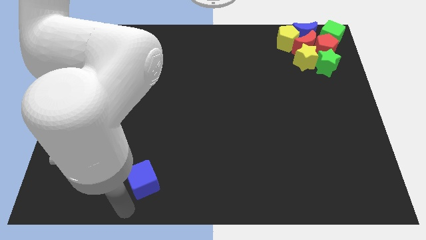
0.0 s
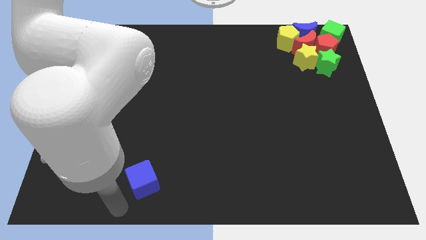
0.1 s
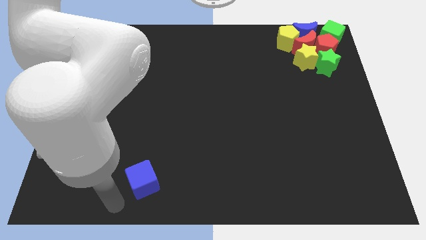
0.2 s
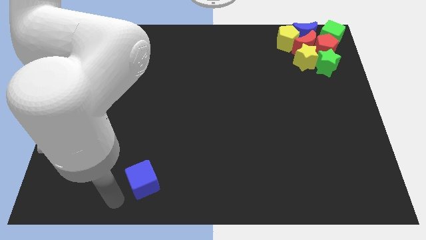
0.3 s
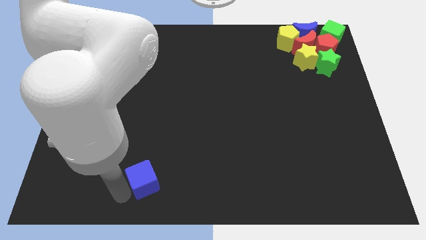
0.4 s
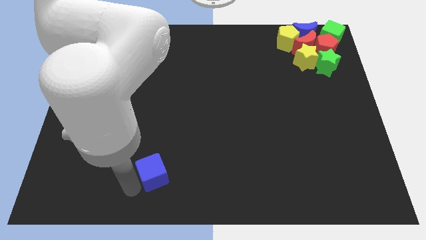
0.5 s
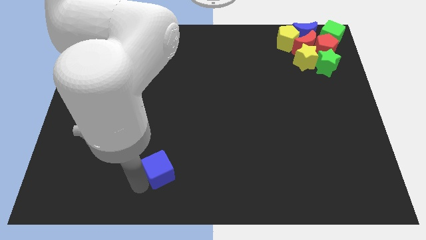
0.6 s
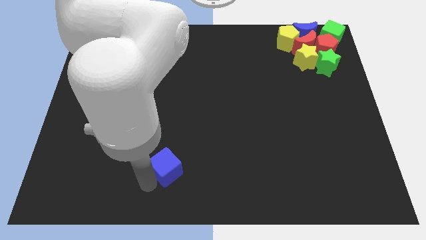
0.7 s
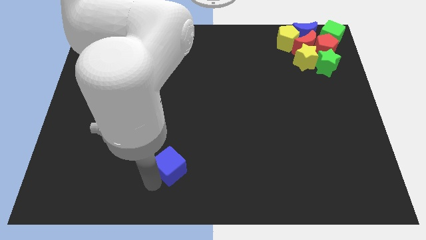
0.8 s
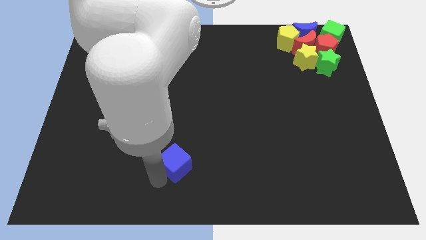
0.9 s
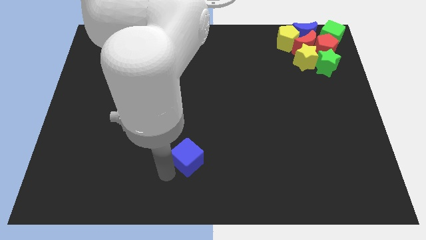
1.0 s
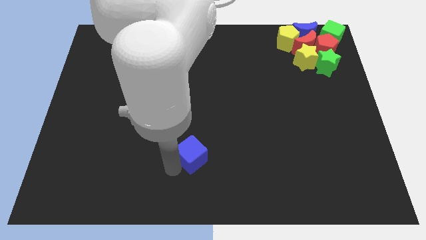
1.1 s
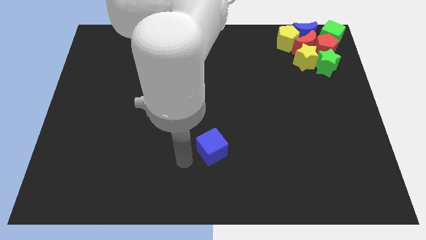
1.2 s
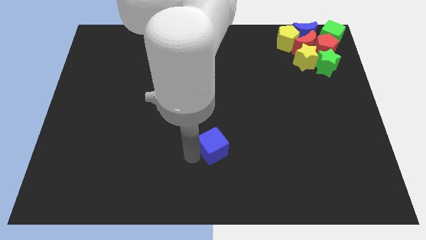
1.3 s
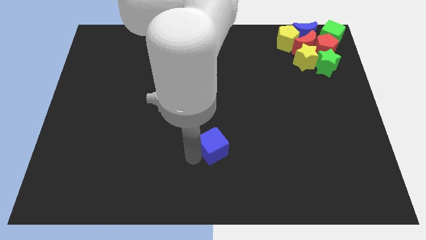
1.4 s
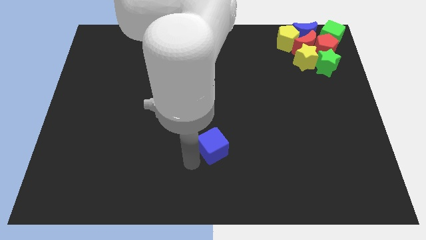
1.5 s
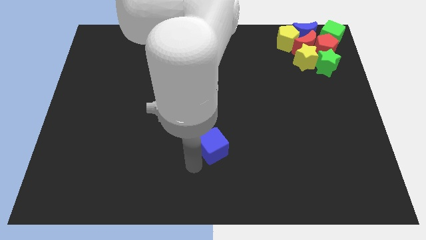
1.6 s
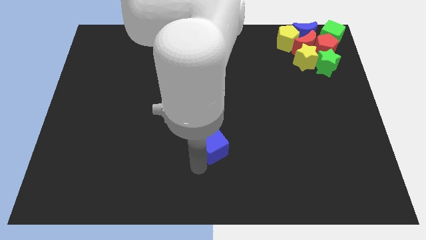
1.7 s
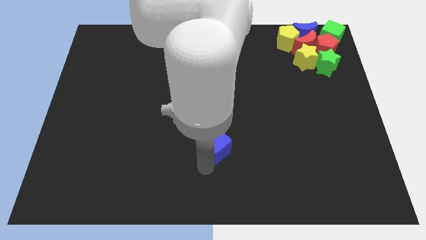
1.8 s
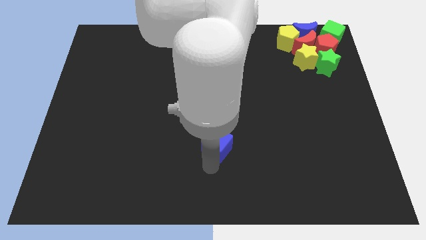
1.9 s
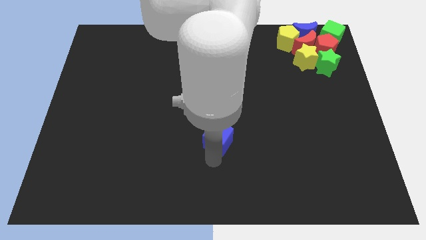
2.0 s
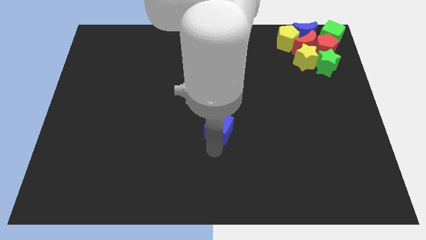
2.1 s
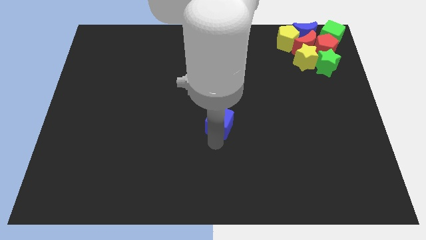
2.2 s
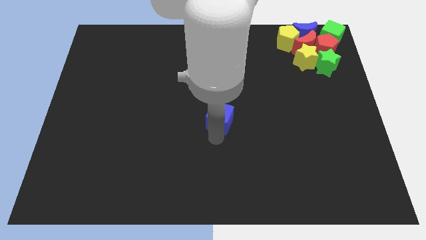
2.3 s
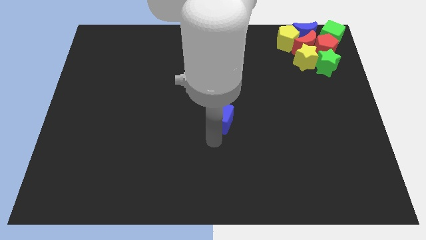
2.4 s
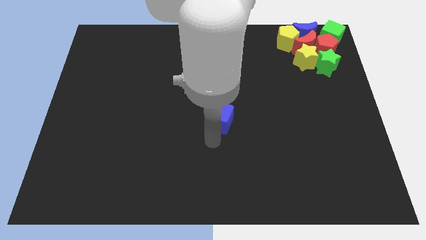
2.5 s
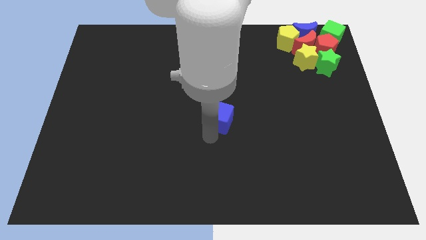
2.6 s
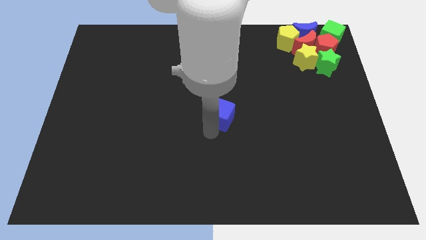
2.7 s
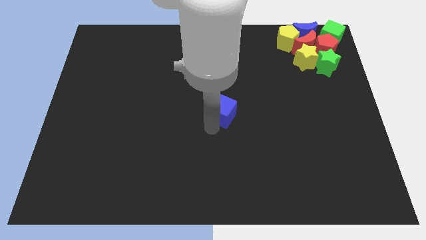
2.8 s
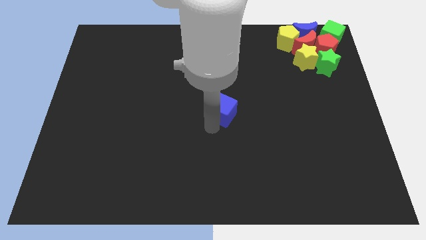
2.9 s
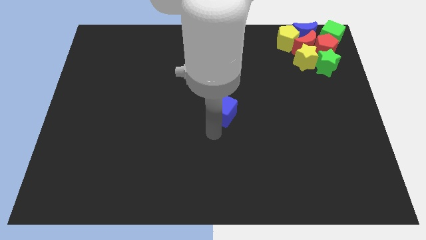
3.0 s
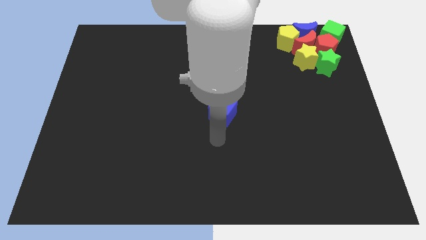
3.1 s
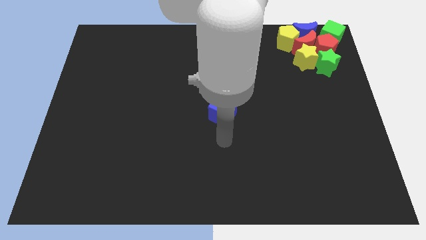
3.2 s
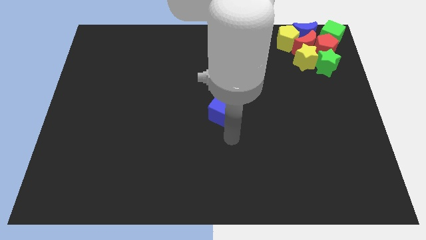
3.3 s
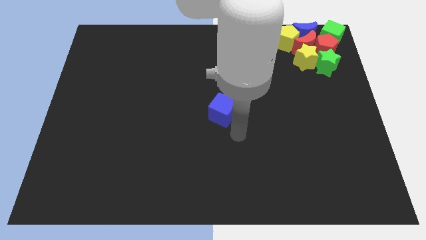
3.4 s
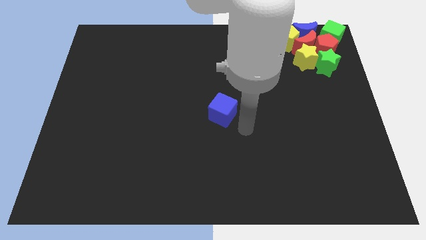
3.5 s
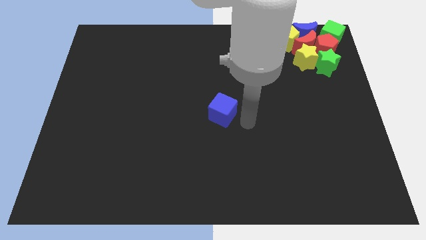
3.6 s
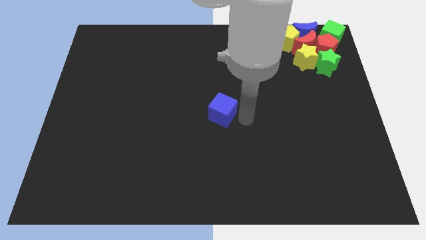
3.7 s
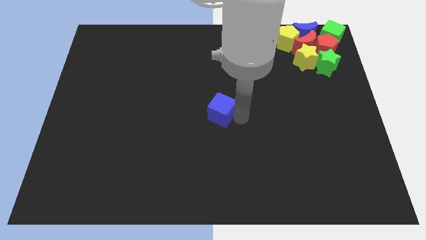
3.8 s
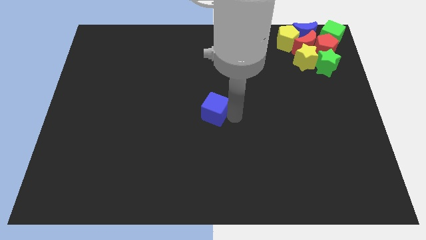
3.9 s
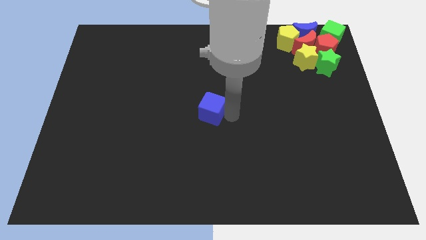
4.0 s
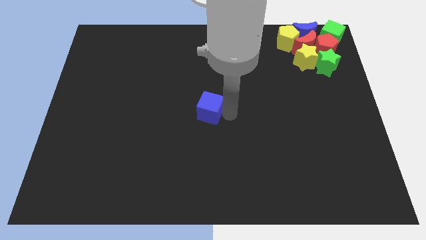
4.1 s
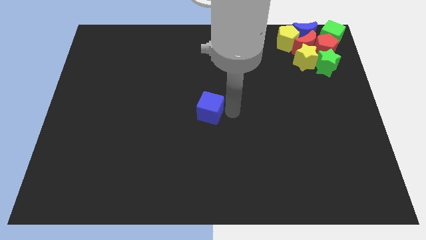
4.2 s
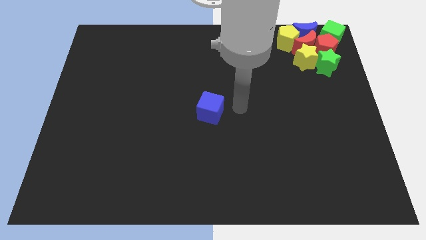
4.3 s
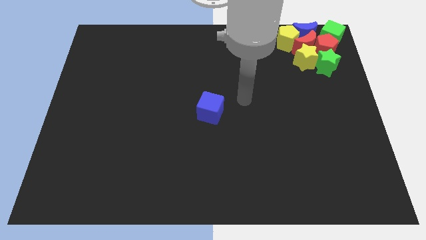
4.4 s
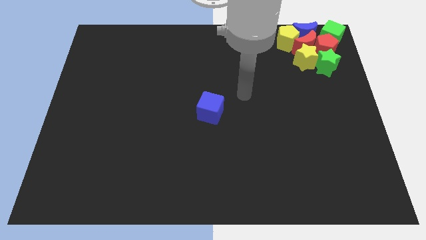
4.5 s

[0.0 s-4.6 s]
place the blue cube at the center of the board

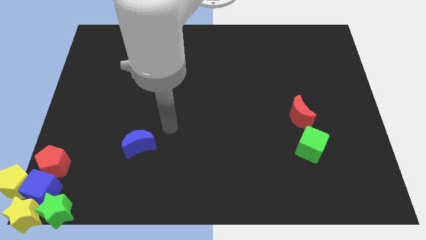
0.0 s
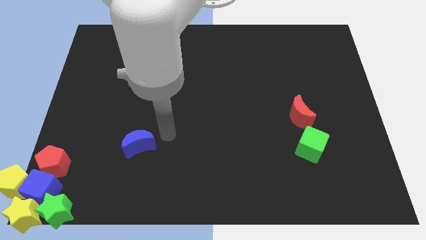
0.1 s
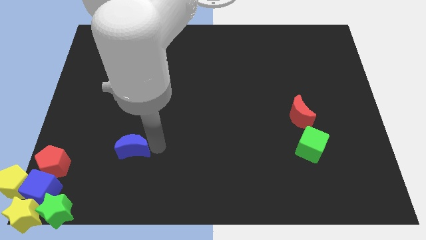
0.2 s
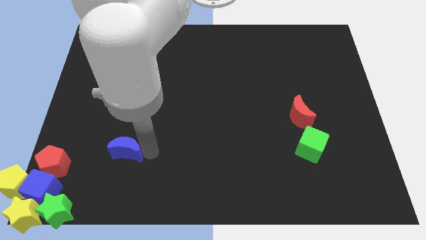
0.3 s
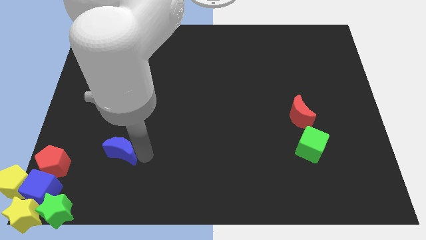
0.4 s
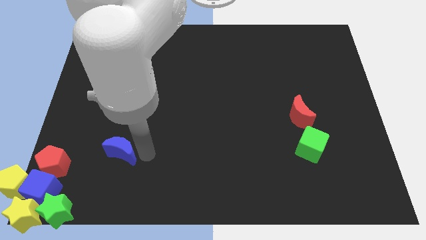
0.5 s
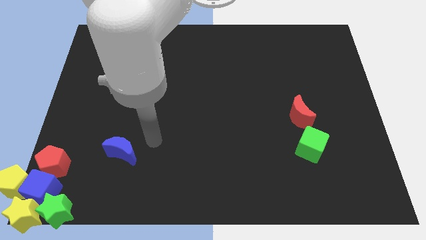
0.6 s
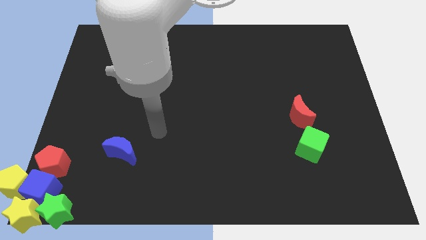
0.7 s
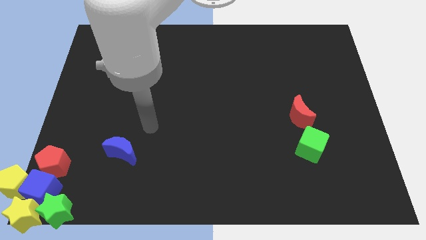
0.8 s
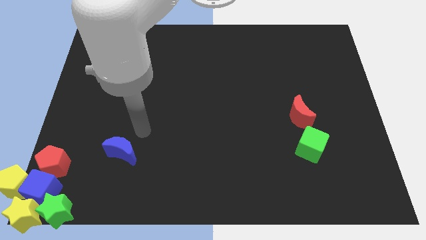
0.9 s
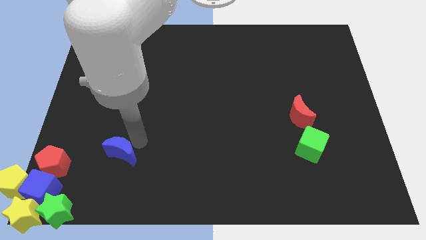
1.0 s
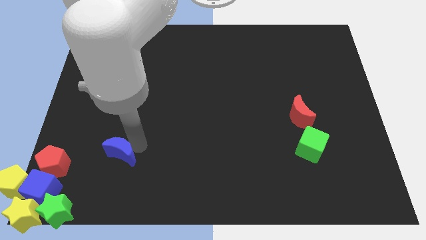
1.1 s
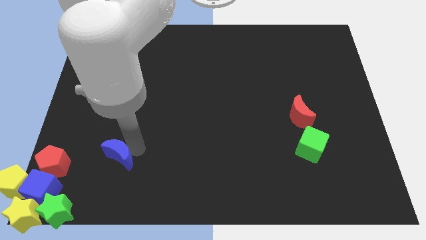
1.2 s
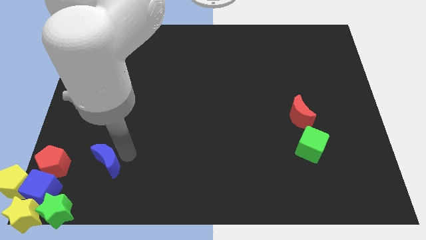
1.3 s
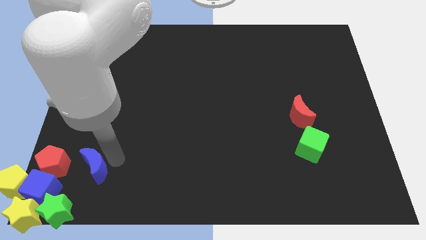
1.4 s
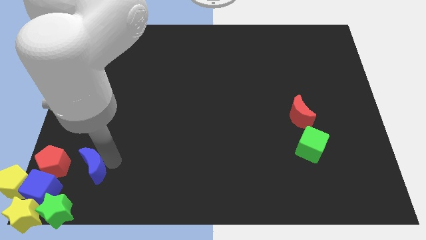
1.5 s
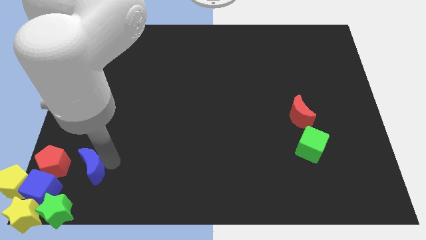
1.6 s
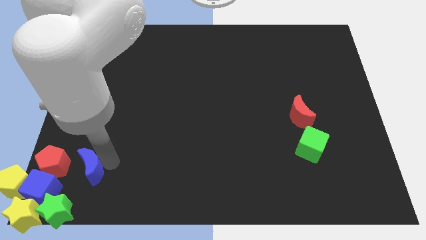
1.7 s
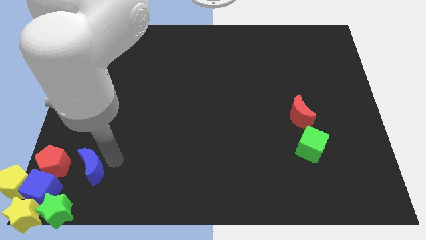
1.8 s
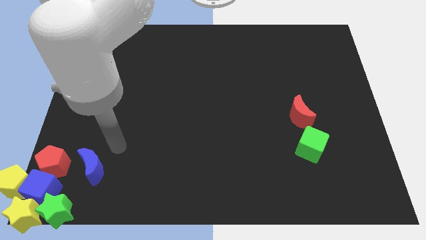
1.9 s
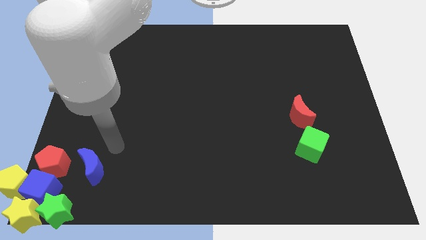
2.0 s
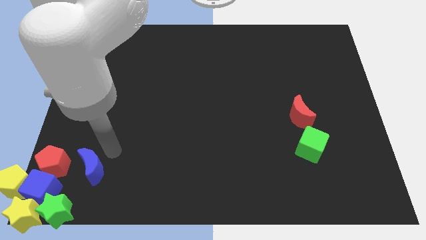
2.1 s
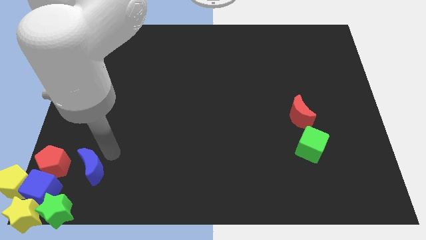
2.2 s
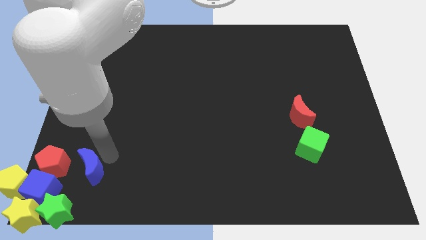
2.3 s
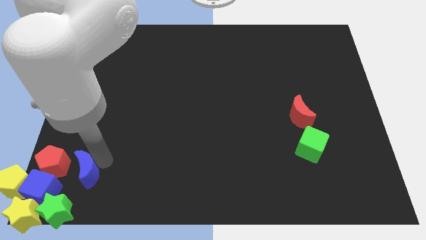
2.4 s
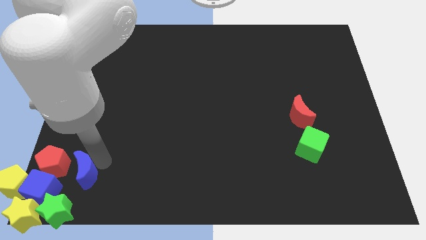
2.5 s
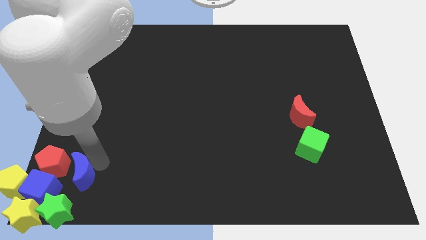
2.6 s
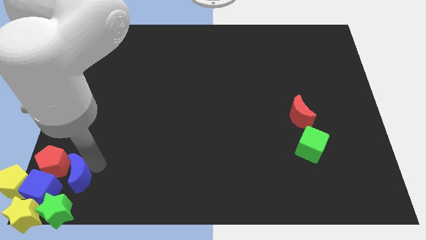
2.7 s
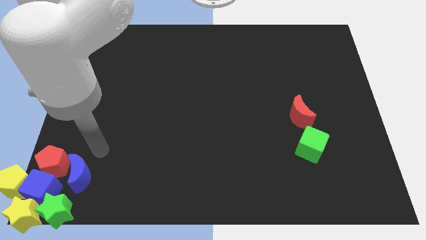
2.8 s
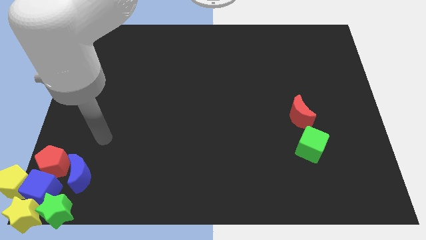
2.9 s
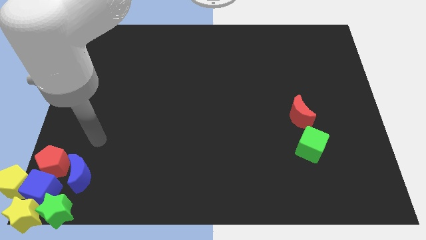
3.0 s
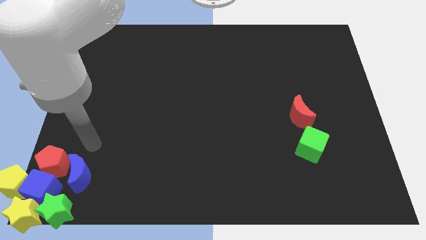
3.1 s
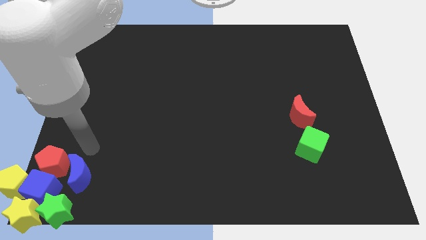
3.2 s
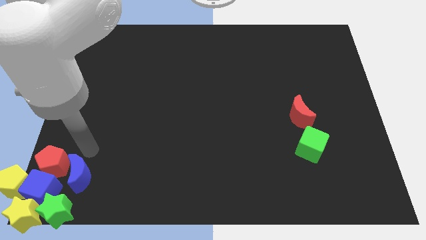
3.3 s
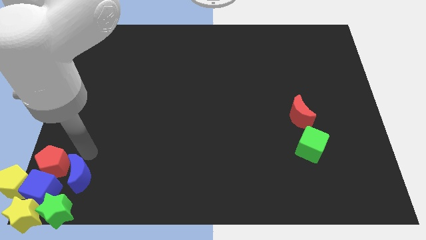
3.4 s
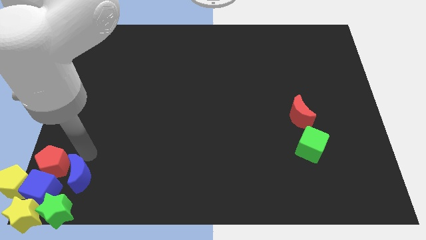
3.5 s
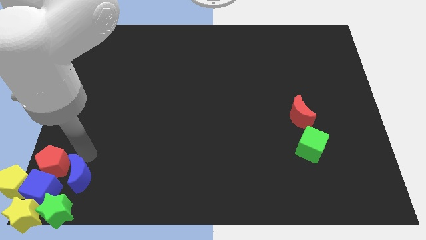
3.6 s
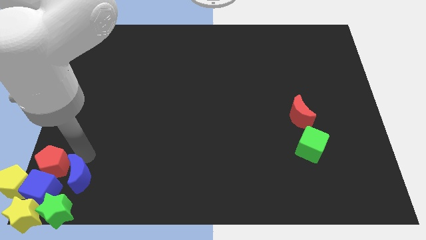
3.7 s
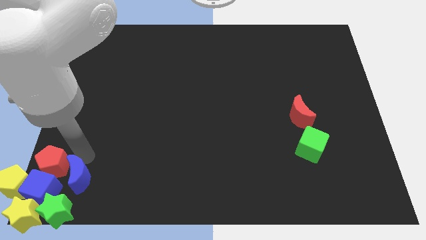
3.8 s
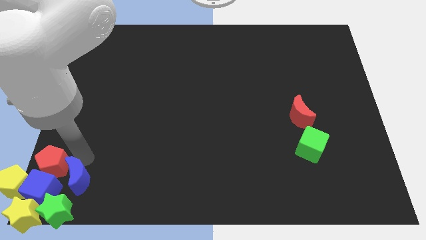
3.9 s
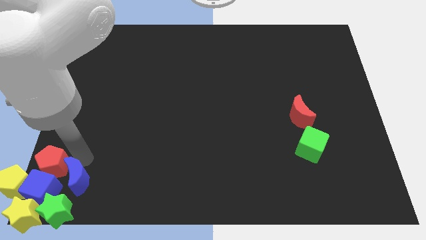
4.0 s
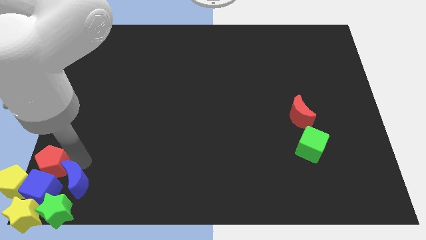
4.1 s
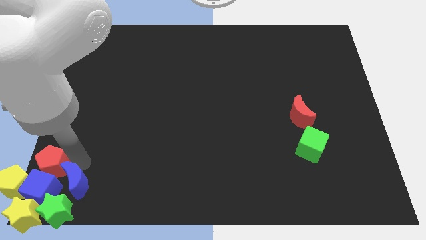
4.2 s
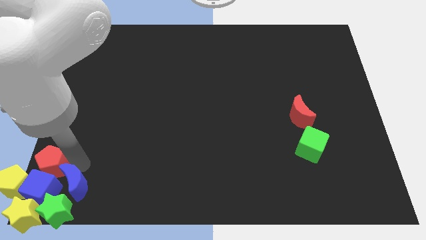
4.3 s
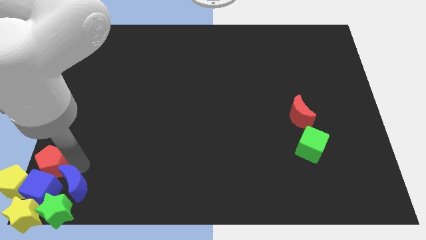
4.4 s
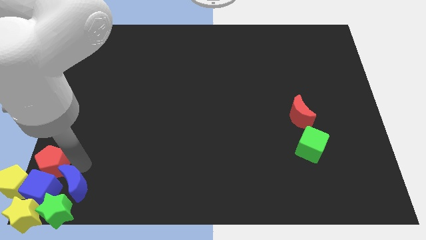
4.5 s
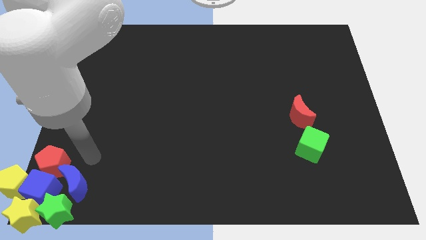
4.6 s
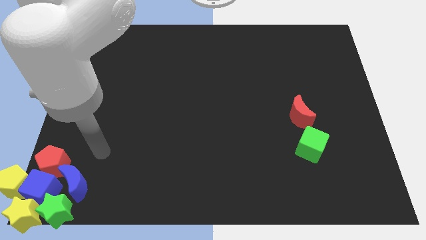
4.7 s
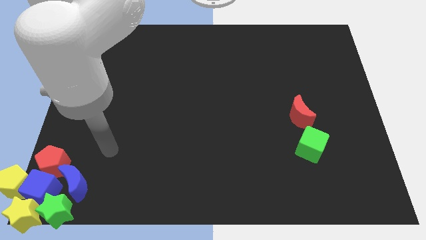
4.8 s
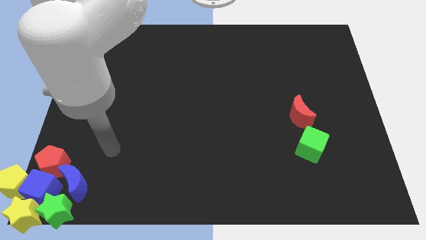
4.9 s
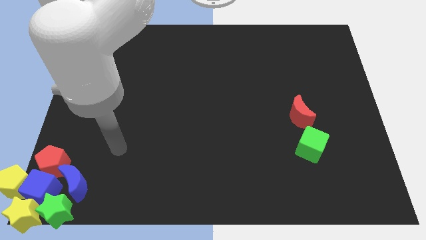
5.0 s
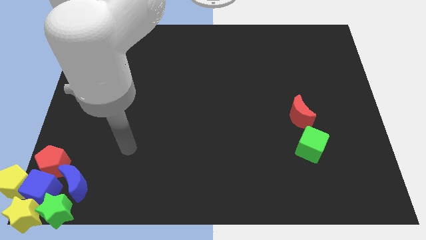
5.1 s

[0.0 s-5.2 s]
put the blue moon right to the blue cube
